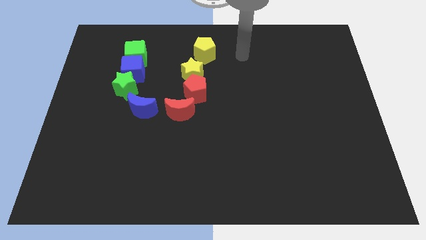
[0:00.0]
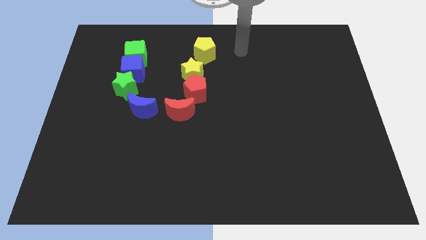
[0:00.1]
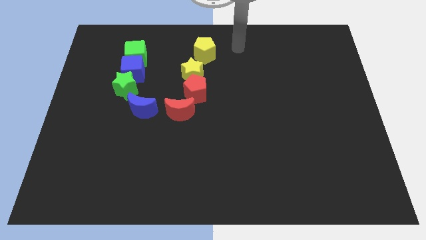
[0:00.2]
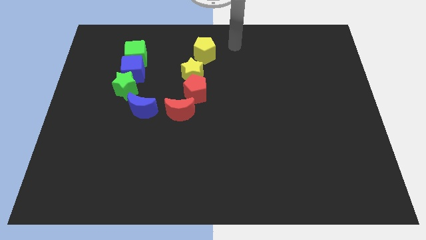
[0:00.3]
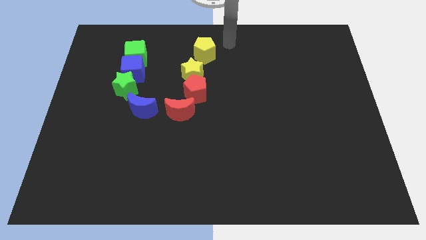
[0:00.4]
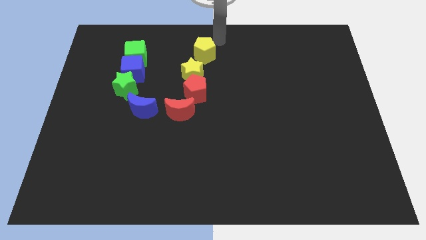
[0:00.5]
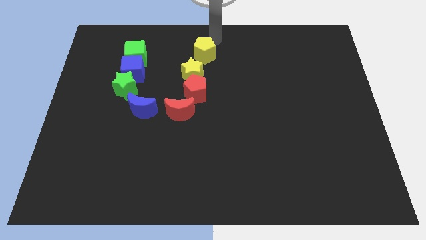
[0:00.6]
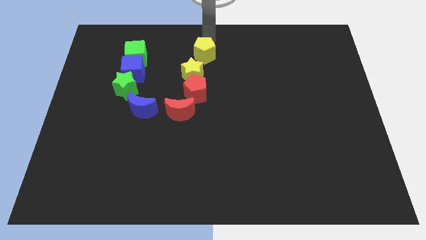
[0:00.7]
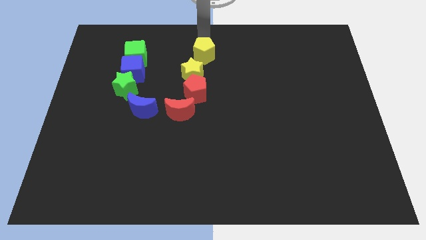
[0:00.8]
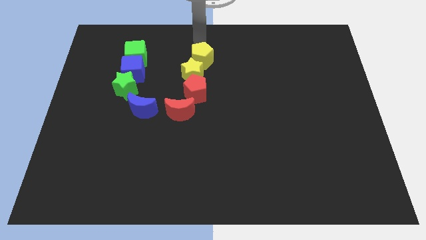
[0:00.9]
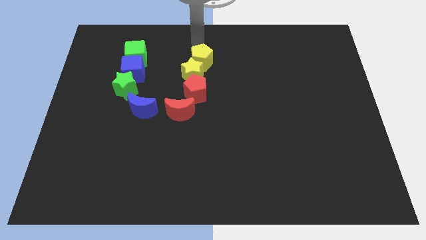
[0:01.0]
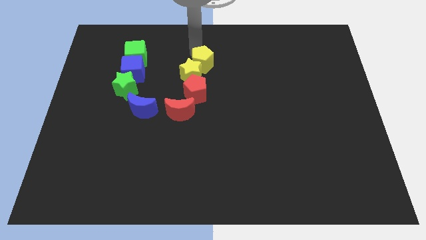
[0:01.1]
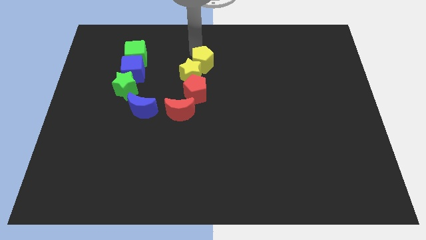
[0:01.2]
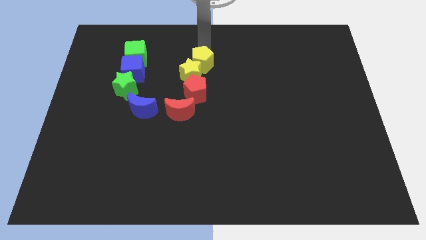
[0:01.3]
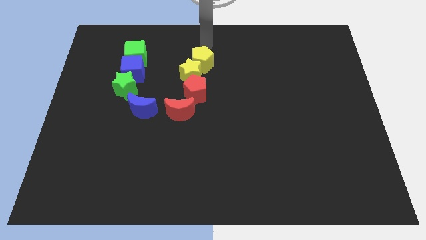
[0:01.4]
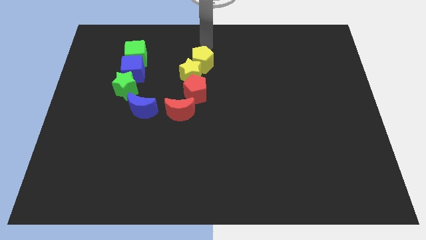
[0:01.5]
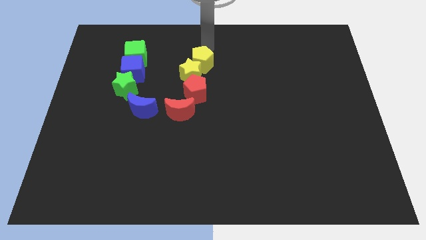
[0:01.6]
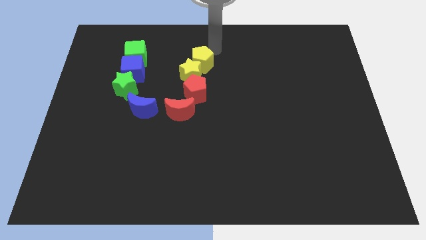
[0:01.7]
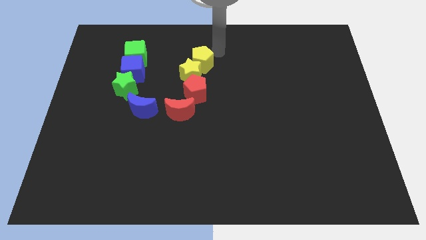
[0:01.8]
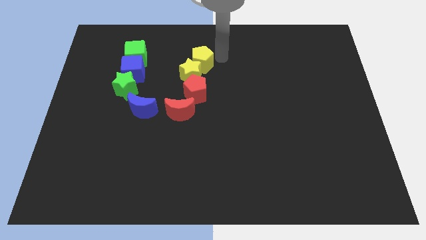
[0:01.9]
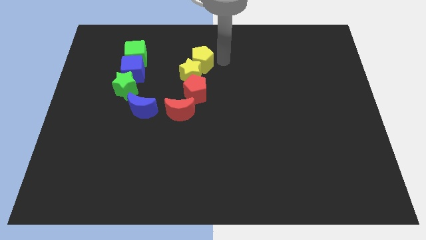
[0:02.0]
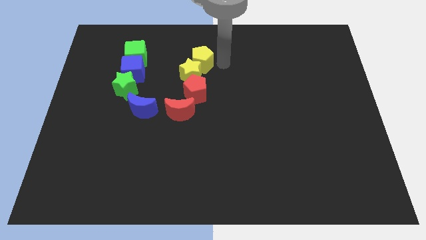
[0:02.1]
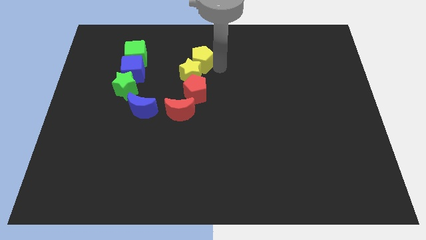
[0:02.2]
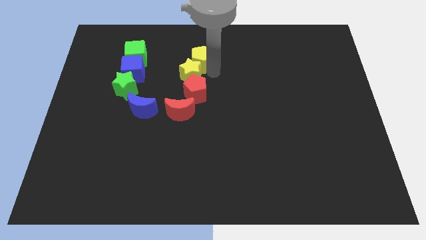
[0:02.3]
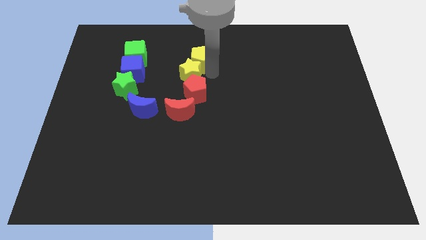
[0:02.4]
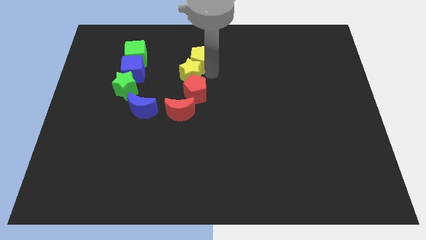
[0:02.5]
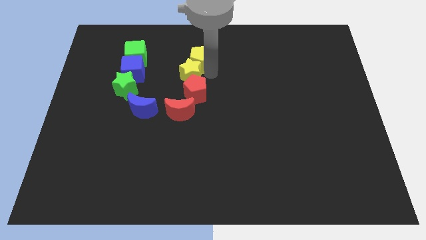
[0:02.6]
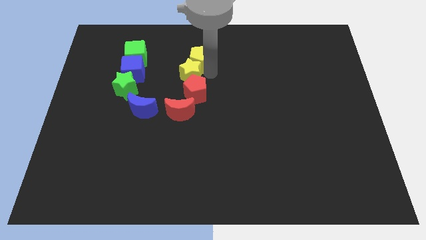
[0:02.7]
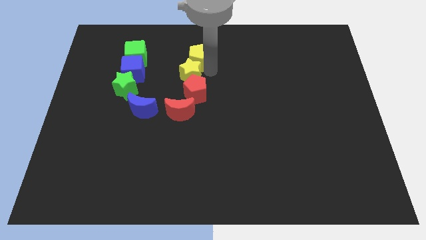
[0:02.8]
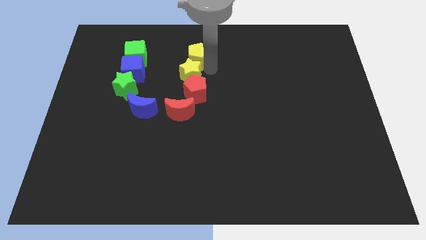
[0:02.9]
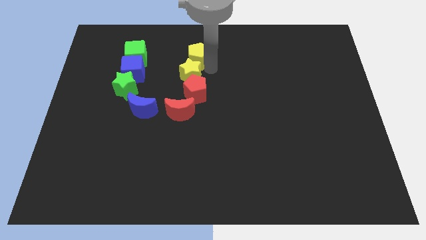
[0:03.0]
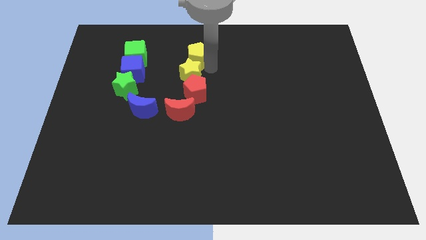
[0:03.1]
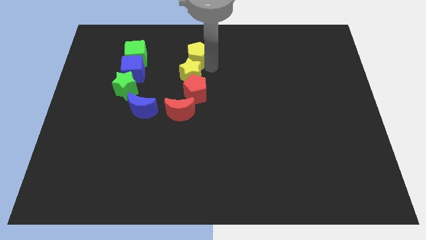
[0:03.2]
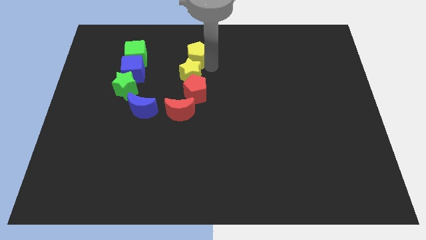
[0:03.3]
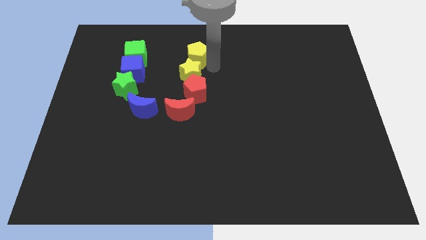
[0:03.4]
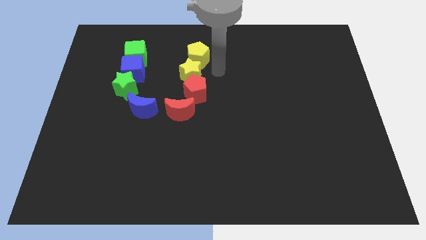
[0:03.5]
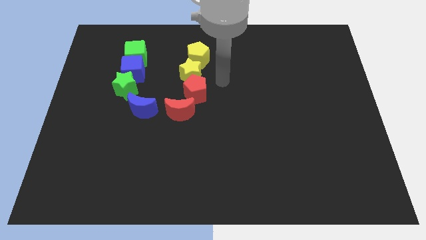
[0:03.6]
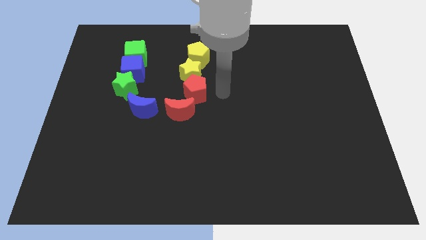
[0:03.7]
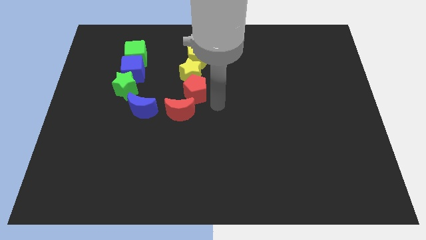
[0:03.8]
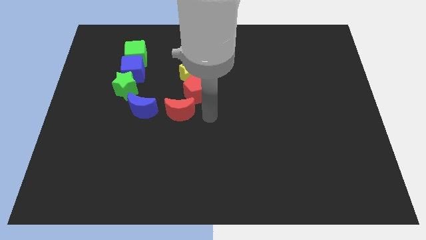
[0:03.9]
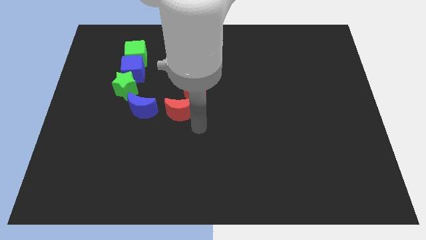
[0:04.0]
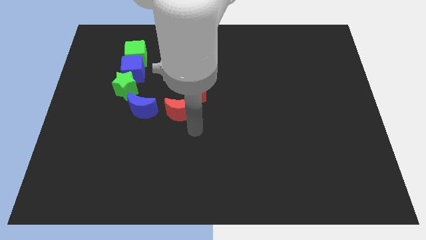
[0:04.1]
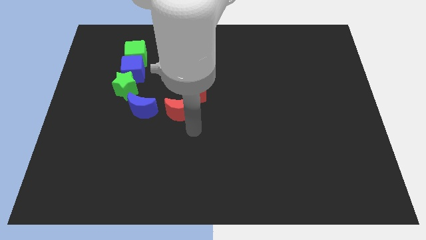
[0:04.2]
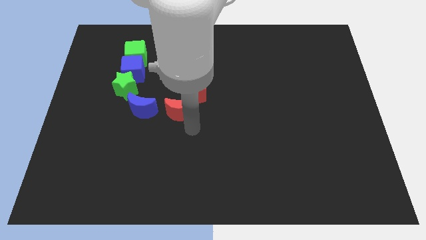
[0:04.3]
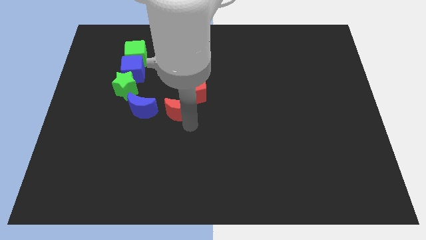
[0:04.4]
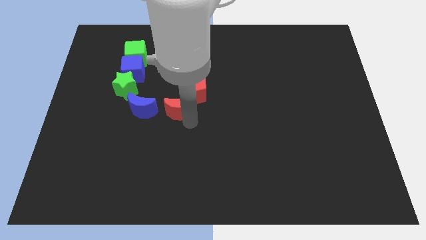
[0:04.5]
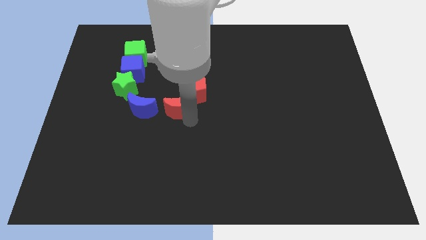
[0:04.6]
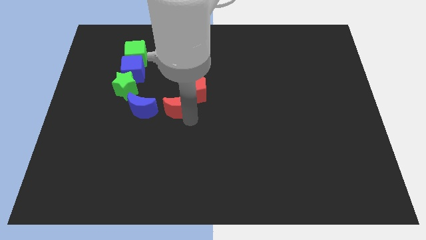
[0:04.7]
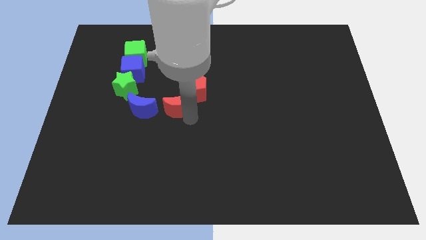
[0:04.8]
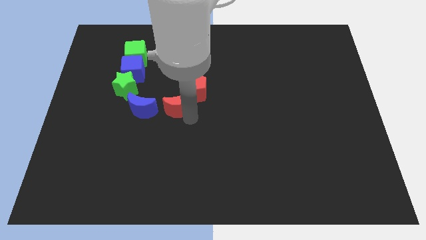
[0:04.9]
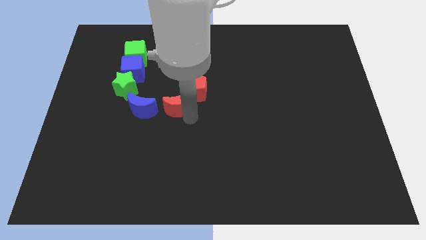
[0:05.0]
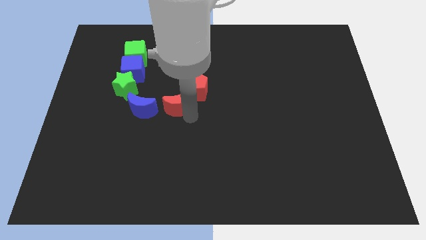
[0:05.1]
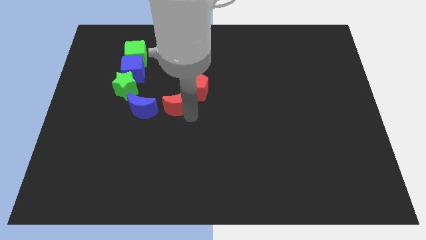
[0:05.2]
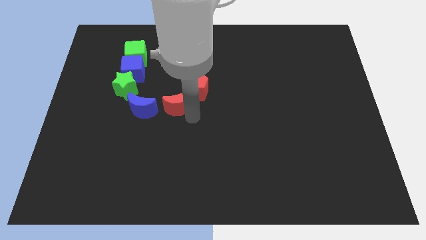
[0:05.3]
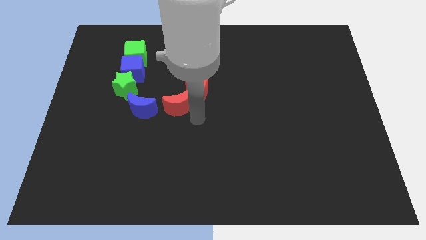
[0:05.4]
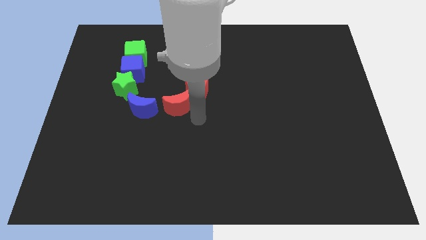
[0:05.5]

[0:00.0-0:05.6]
adjust yellow and red blocks at the top right of the board

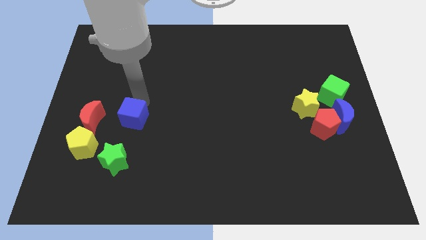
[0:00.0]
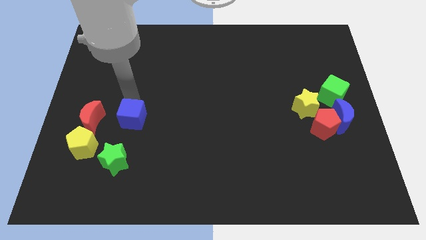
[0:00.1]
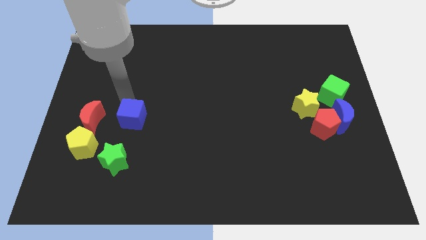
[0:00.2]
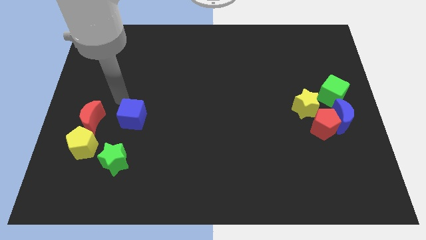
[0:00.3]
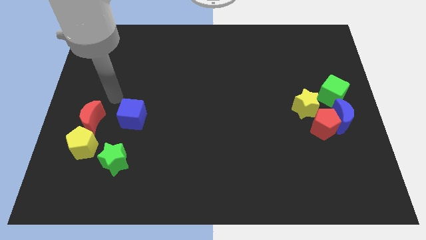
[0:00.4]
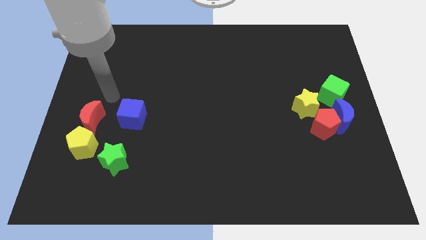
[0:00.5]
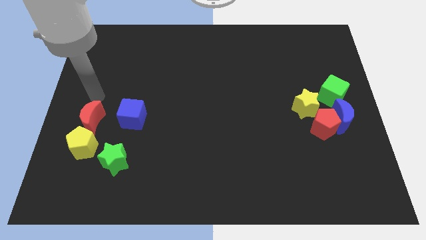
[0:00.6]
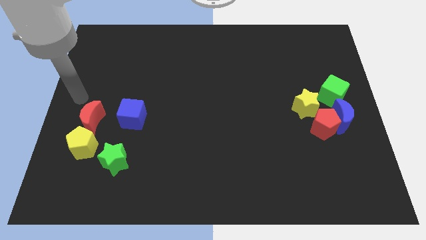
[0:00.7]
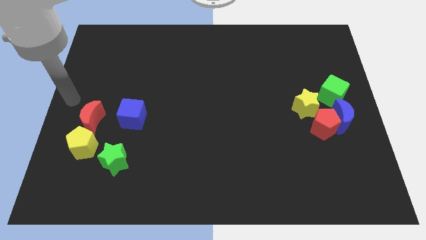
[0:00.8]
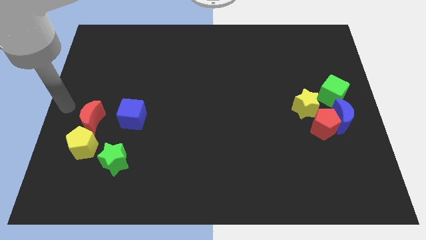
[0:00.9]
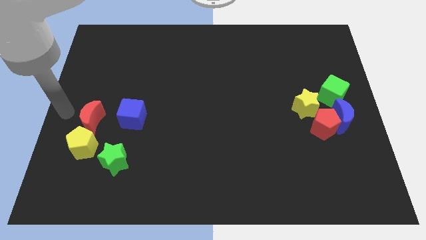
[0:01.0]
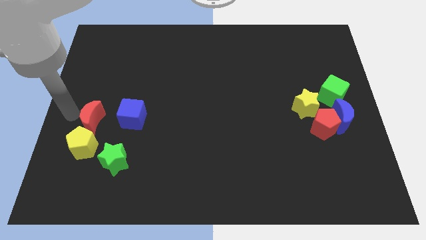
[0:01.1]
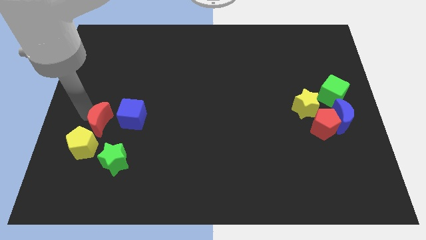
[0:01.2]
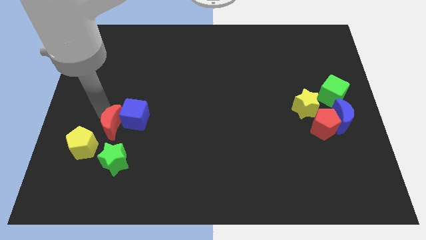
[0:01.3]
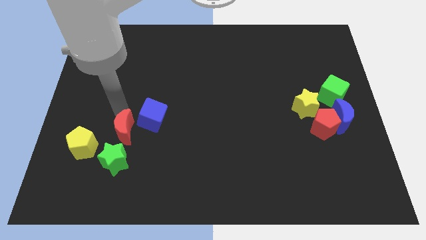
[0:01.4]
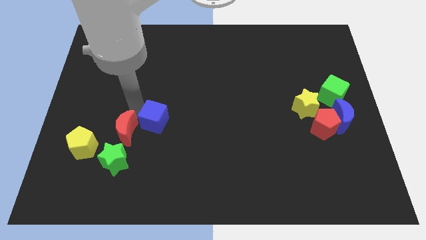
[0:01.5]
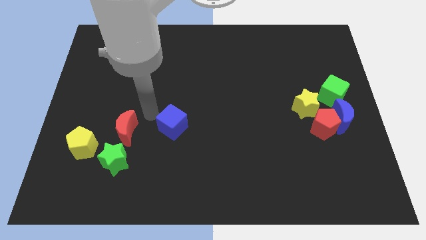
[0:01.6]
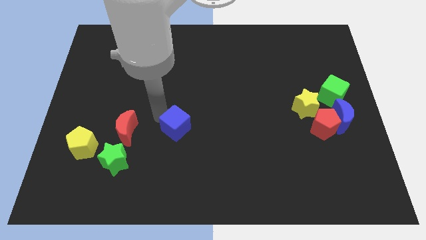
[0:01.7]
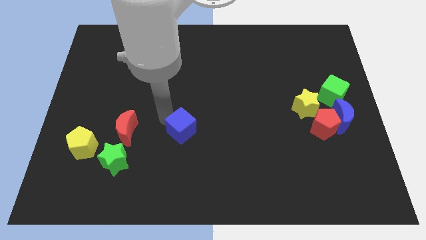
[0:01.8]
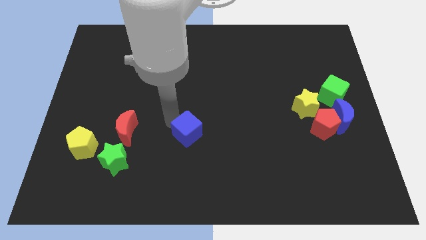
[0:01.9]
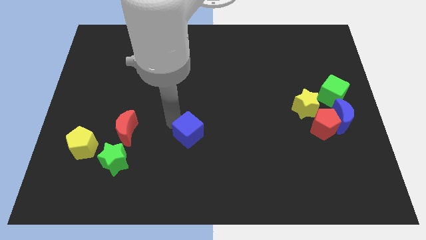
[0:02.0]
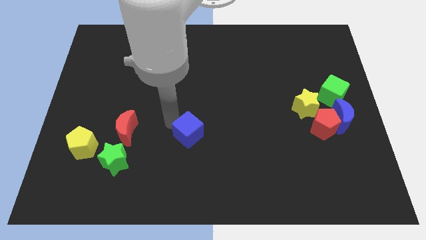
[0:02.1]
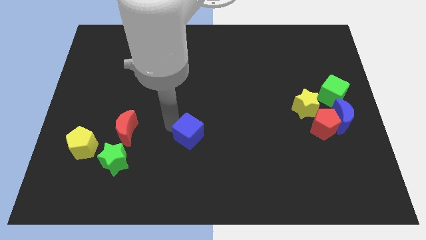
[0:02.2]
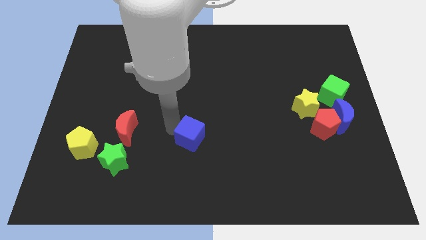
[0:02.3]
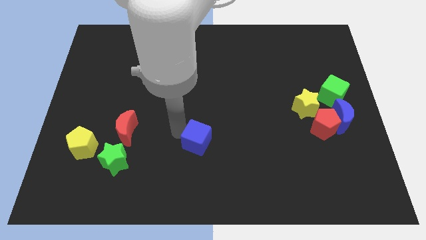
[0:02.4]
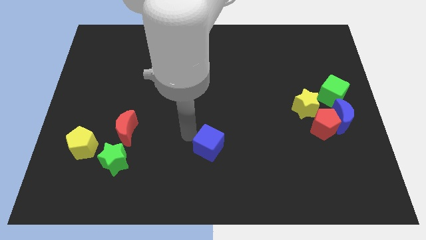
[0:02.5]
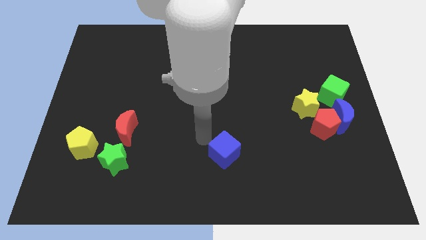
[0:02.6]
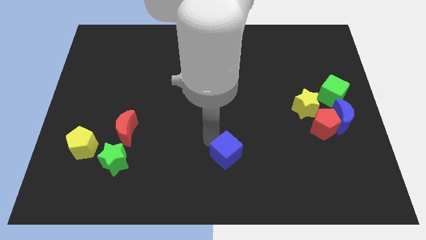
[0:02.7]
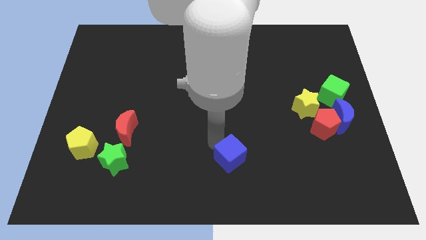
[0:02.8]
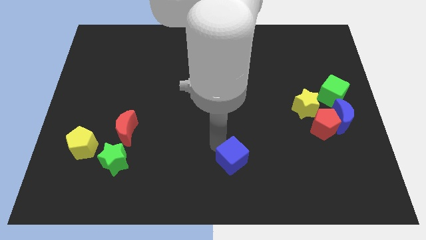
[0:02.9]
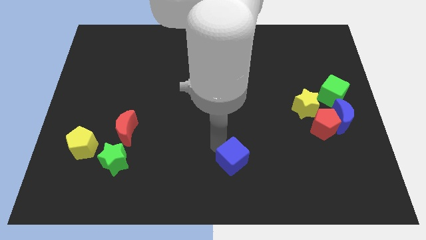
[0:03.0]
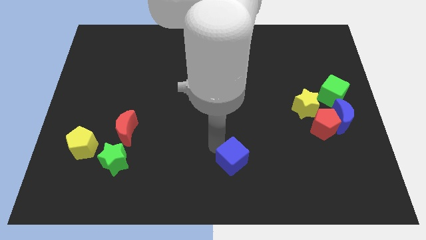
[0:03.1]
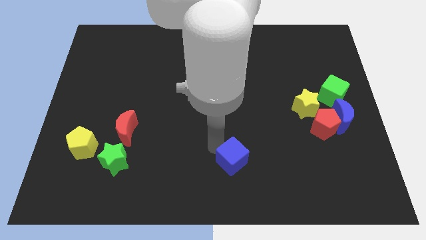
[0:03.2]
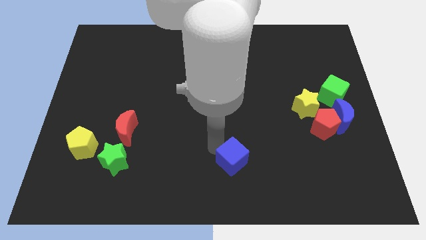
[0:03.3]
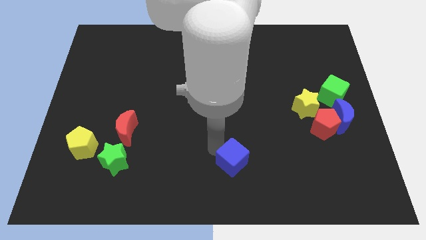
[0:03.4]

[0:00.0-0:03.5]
push blue cube towards bottom
